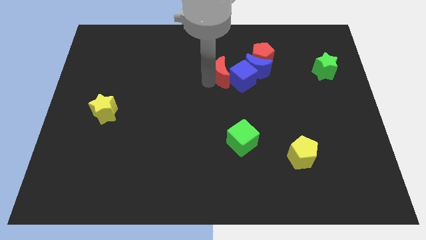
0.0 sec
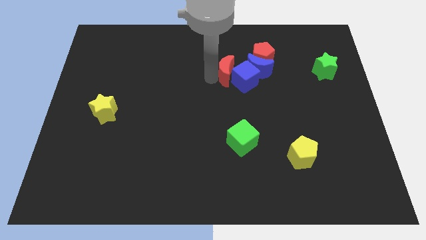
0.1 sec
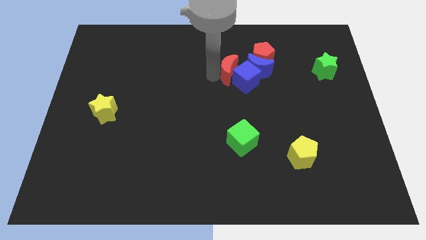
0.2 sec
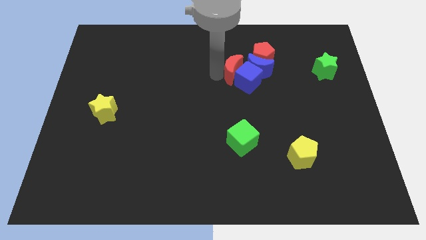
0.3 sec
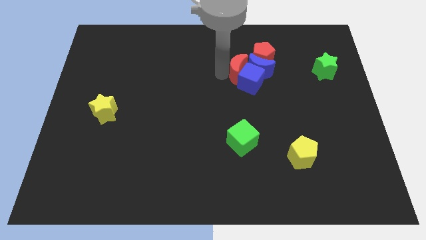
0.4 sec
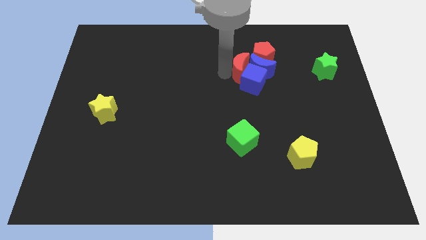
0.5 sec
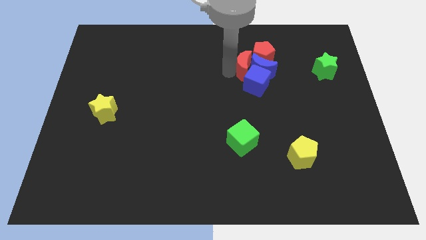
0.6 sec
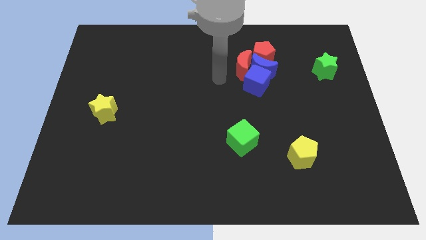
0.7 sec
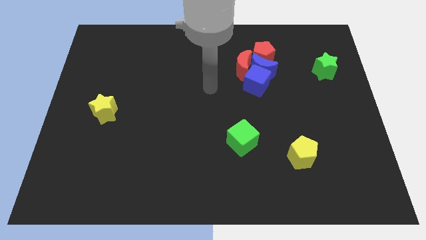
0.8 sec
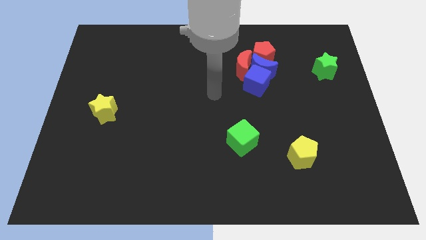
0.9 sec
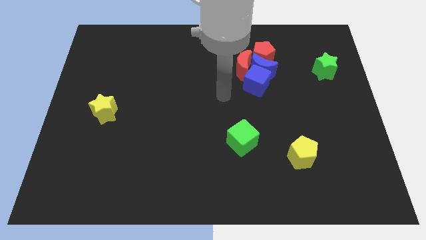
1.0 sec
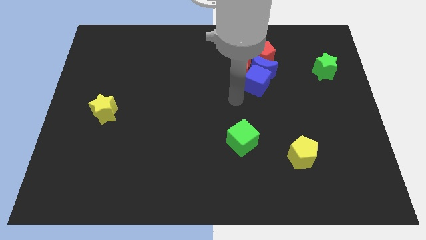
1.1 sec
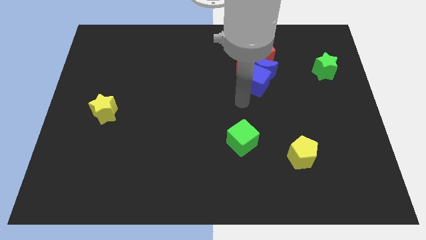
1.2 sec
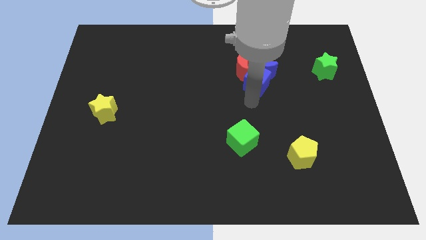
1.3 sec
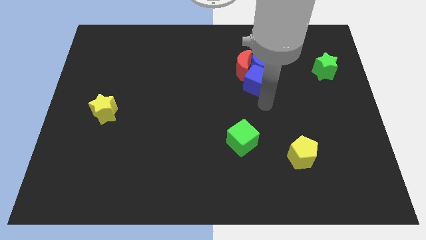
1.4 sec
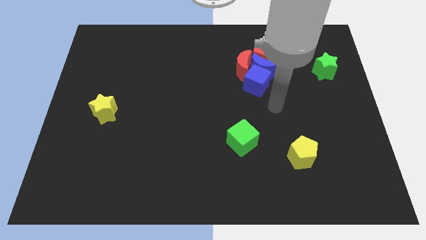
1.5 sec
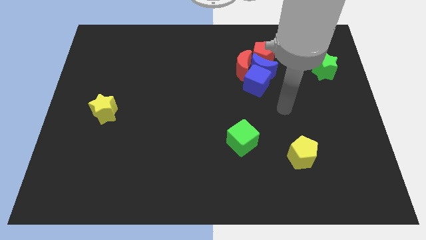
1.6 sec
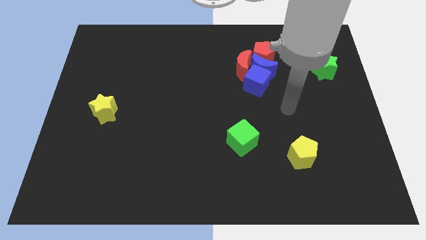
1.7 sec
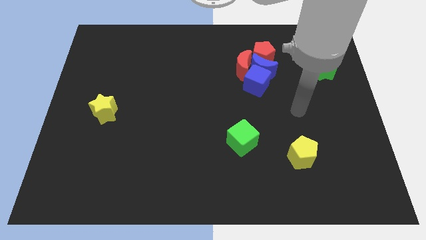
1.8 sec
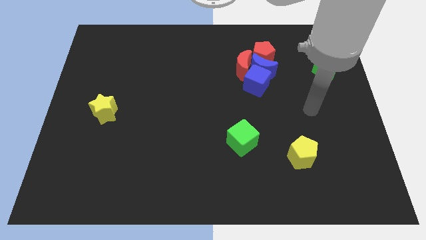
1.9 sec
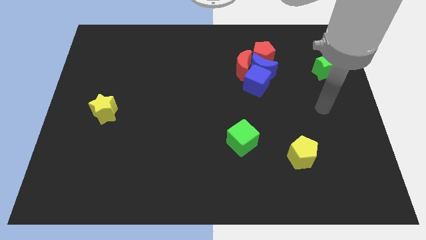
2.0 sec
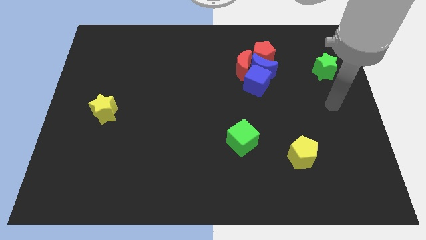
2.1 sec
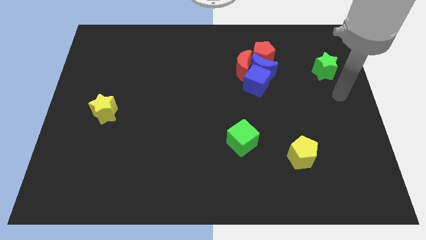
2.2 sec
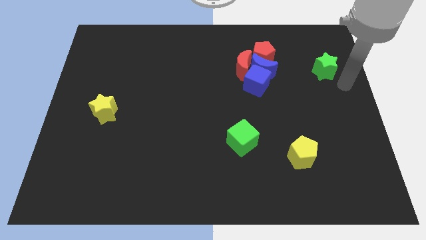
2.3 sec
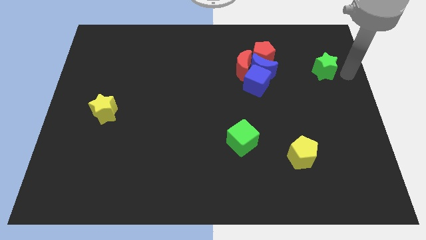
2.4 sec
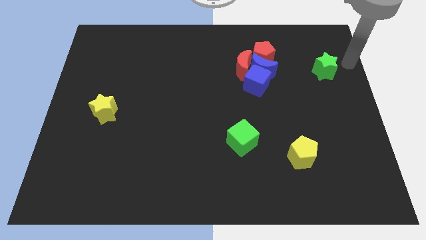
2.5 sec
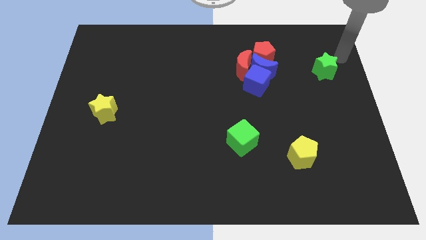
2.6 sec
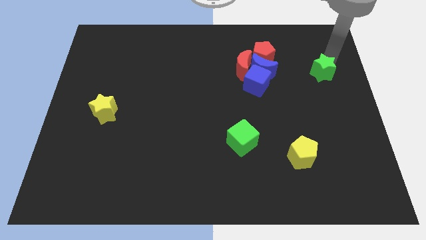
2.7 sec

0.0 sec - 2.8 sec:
move your arm towards the green star

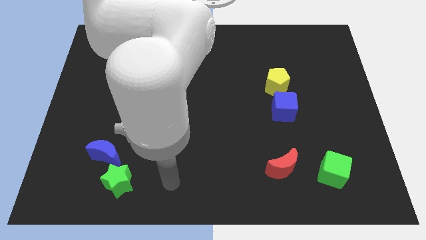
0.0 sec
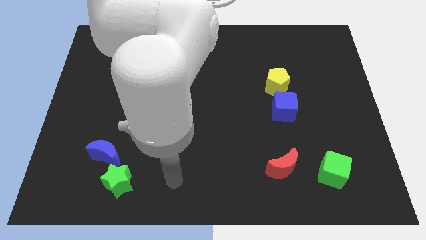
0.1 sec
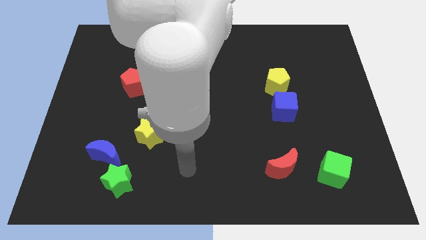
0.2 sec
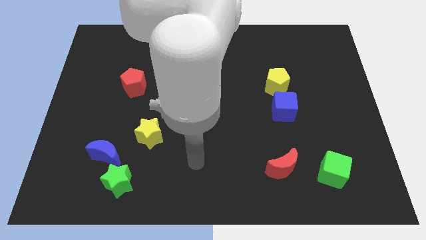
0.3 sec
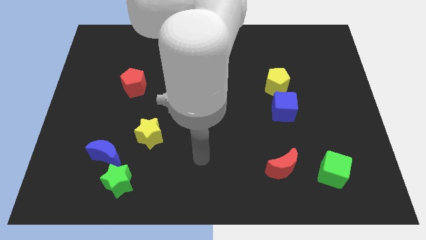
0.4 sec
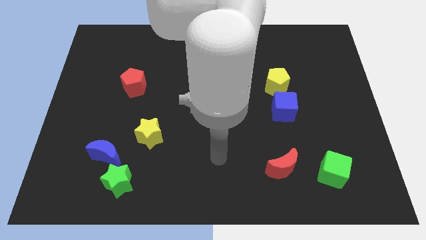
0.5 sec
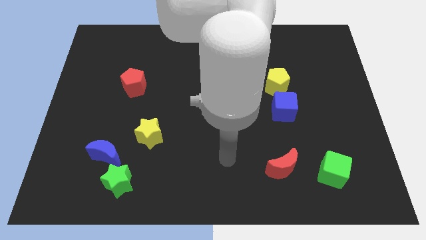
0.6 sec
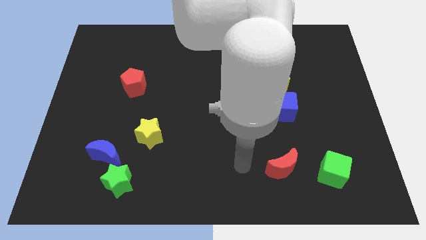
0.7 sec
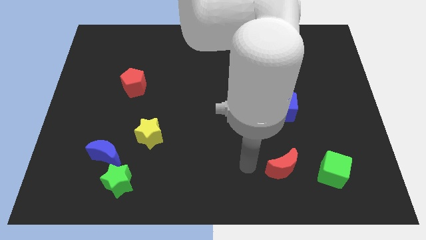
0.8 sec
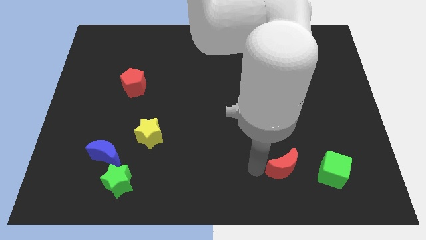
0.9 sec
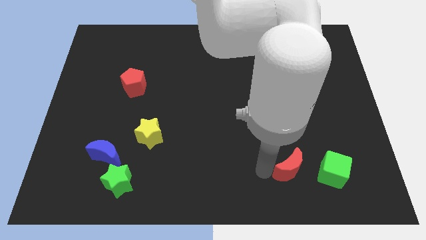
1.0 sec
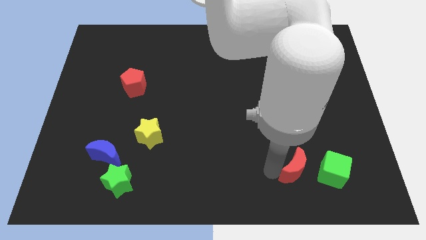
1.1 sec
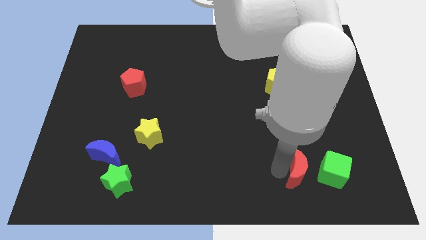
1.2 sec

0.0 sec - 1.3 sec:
move the red moon slightly to the left side of the green cube

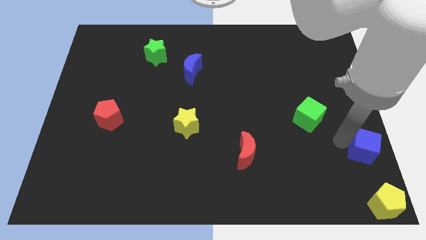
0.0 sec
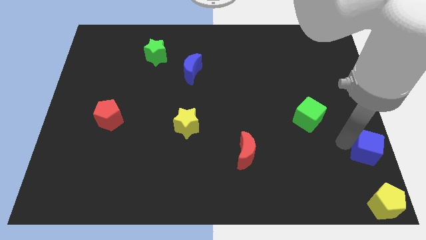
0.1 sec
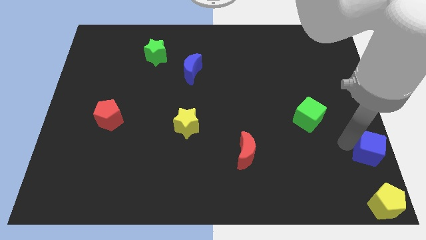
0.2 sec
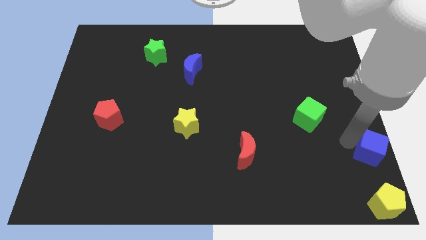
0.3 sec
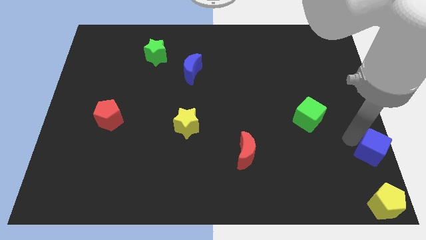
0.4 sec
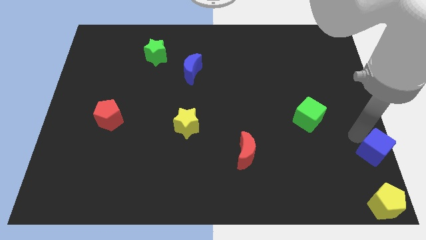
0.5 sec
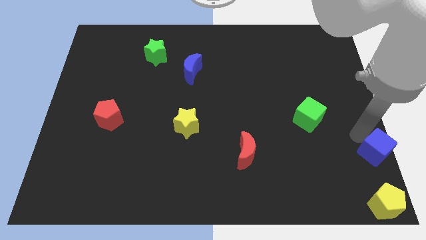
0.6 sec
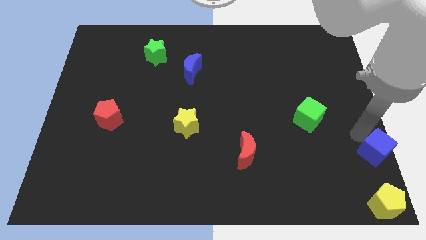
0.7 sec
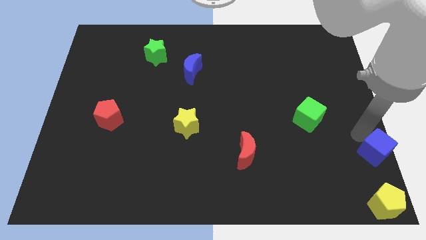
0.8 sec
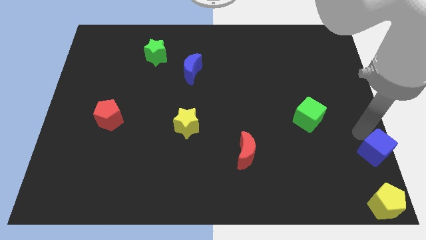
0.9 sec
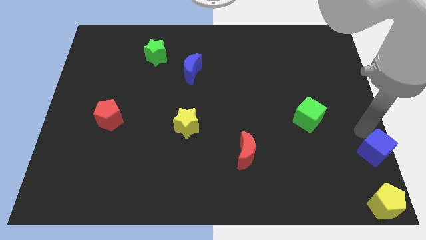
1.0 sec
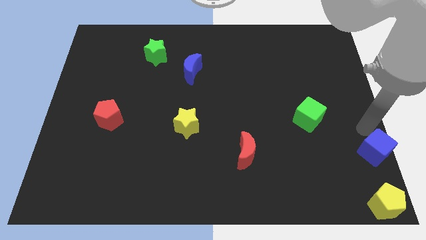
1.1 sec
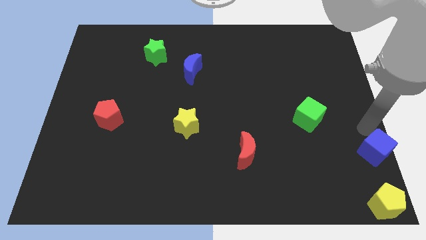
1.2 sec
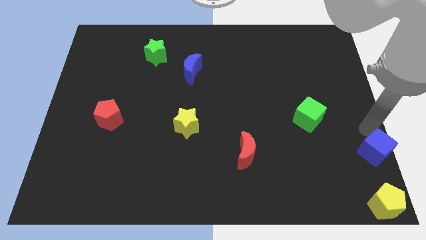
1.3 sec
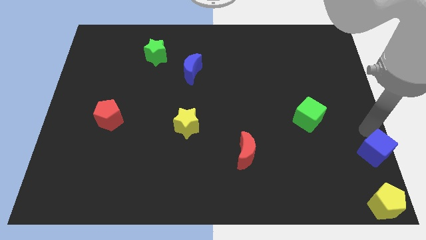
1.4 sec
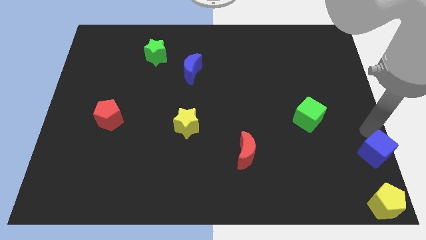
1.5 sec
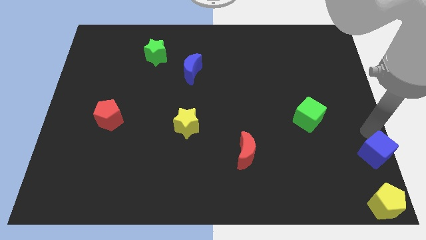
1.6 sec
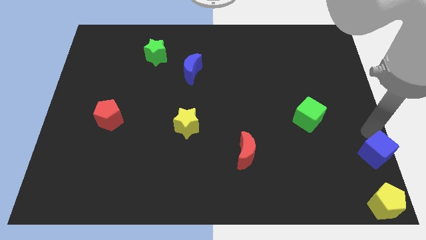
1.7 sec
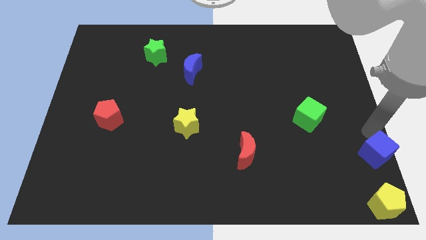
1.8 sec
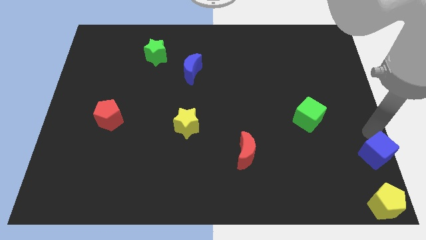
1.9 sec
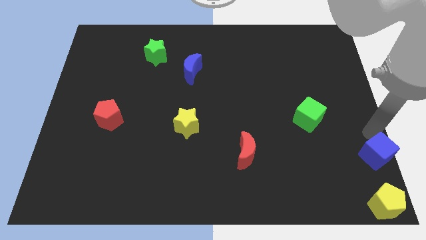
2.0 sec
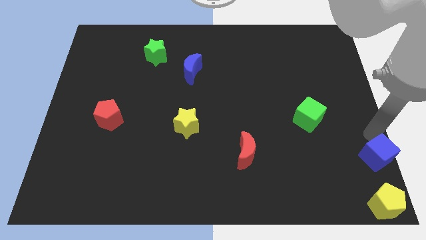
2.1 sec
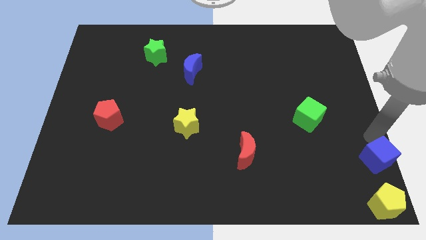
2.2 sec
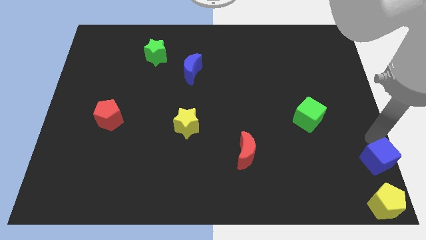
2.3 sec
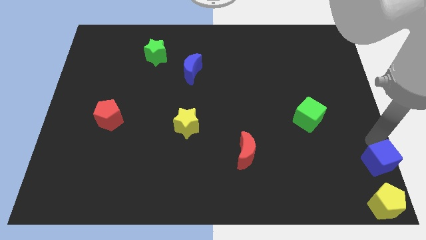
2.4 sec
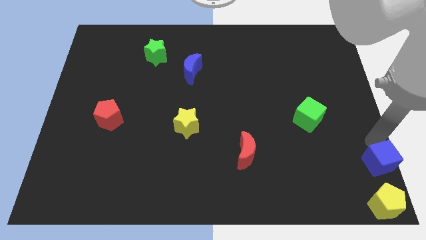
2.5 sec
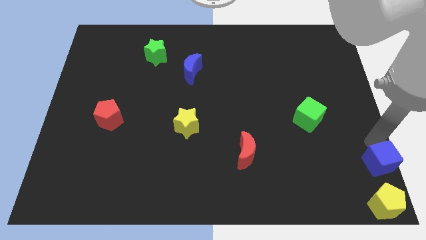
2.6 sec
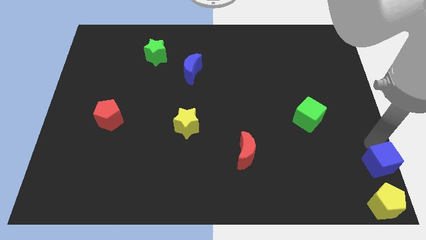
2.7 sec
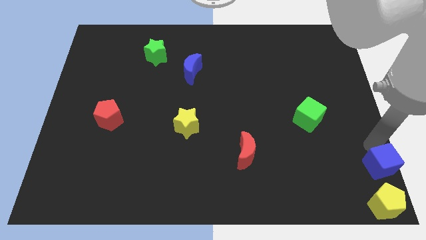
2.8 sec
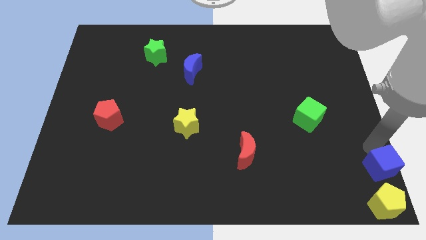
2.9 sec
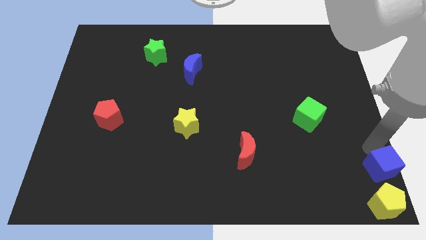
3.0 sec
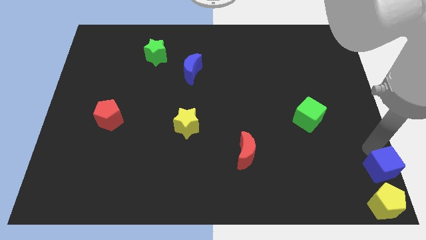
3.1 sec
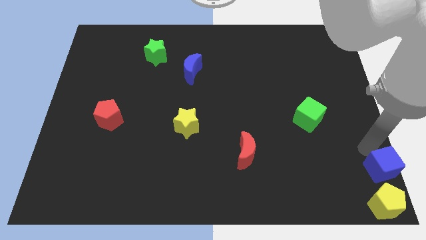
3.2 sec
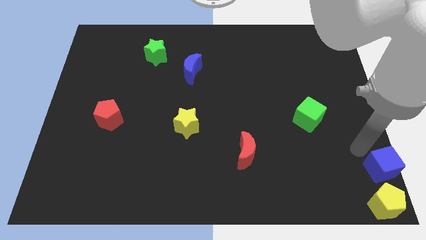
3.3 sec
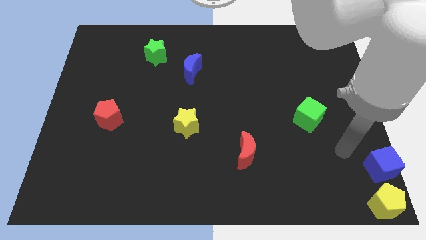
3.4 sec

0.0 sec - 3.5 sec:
push the blue cube above the yellow pentagon

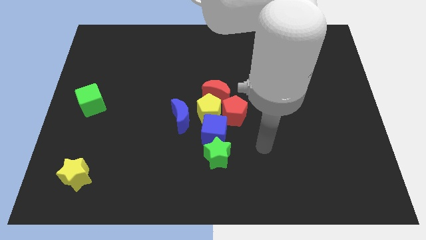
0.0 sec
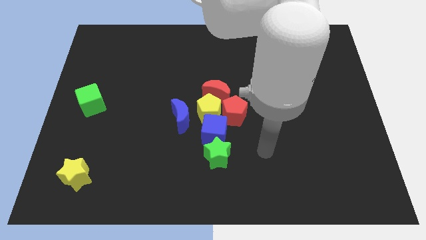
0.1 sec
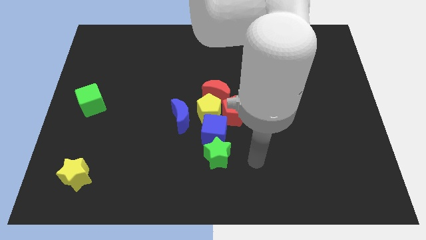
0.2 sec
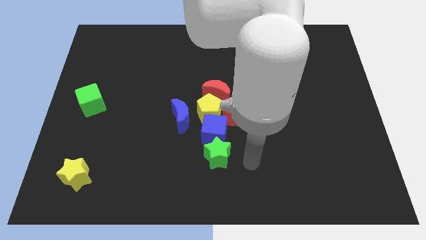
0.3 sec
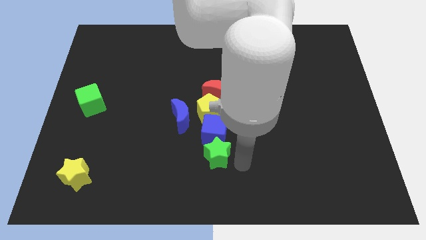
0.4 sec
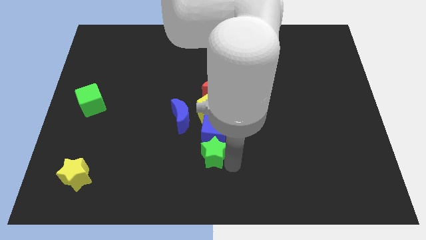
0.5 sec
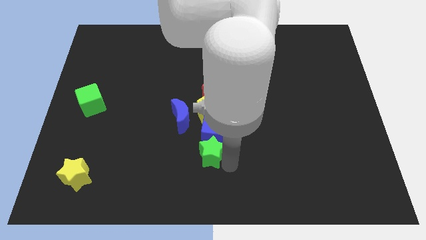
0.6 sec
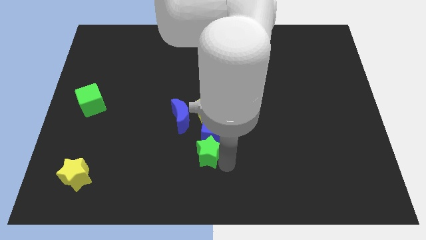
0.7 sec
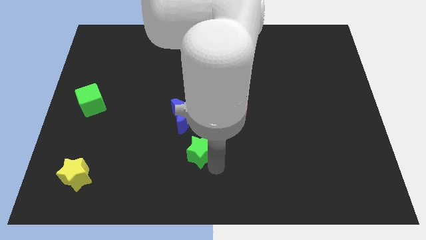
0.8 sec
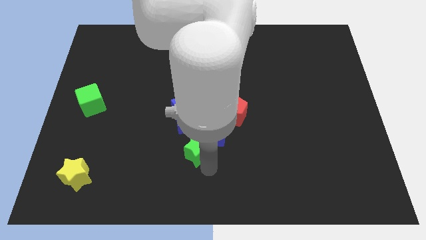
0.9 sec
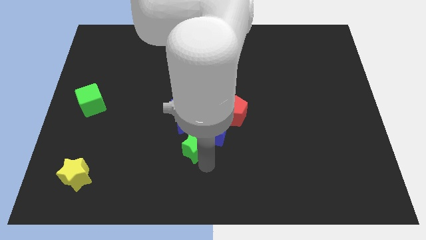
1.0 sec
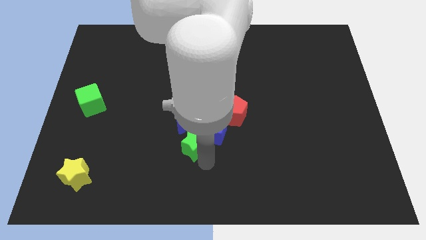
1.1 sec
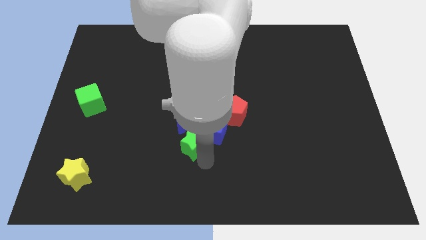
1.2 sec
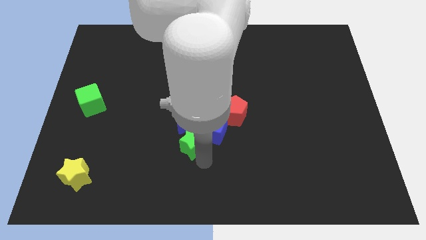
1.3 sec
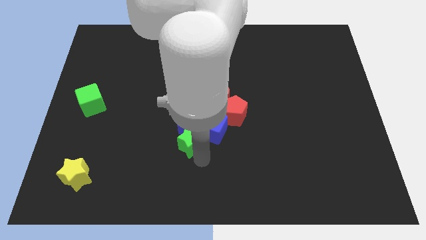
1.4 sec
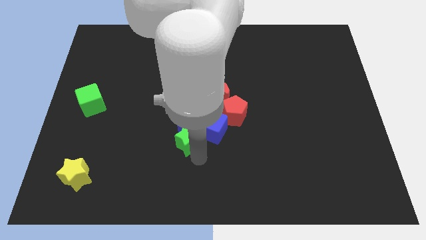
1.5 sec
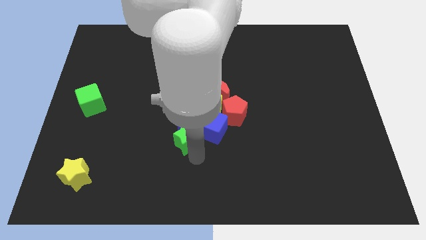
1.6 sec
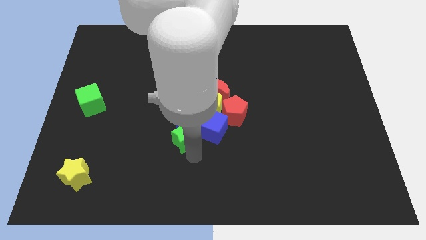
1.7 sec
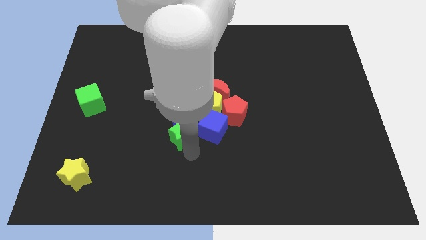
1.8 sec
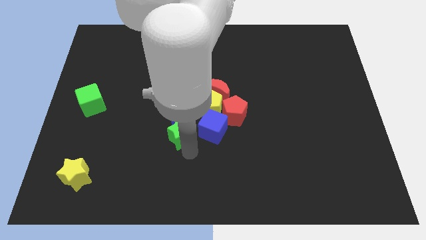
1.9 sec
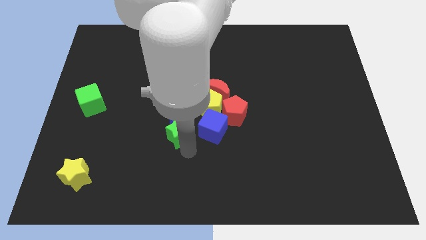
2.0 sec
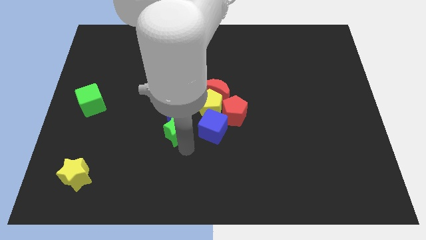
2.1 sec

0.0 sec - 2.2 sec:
push the green star to the bottom of the blue crescent
